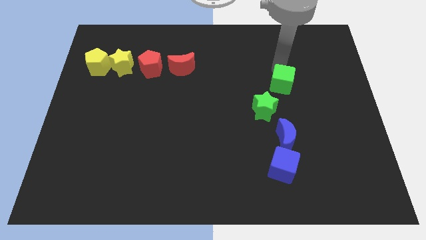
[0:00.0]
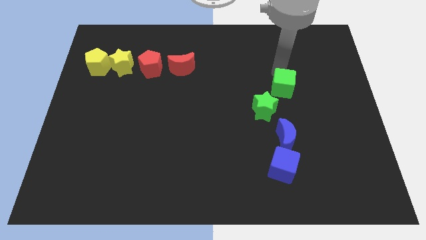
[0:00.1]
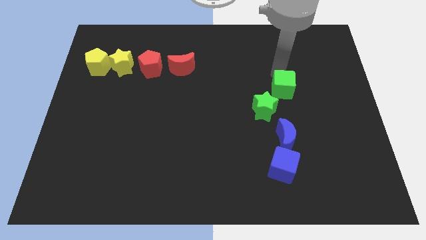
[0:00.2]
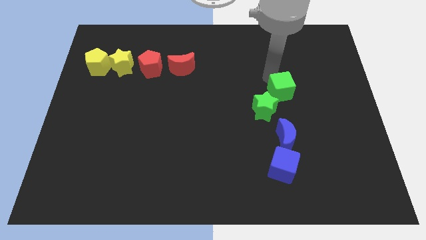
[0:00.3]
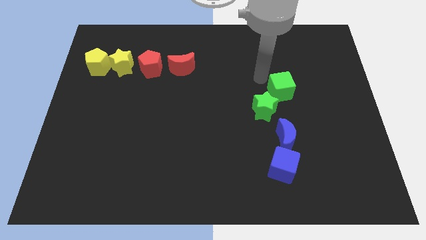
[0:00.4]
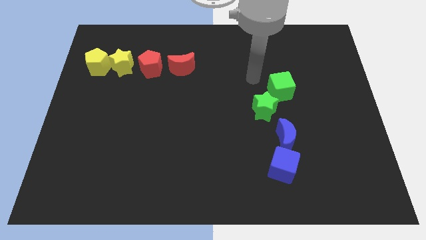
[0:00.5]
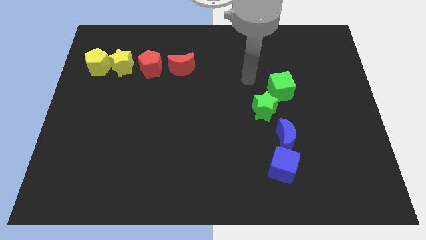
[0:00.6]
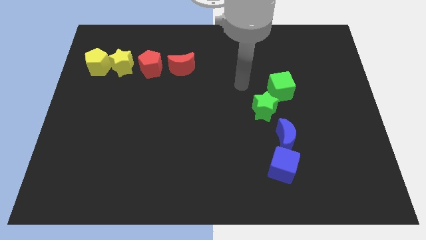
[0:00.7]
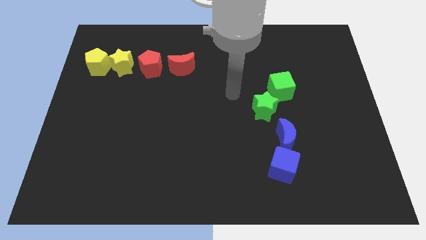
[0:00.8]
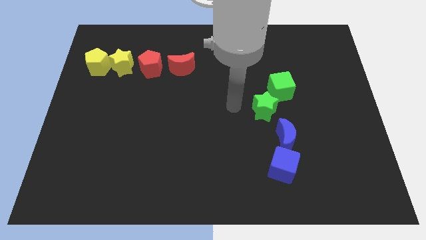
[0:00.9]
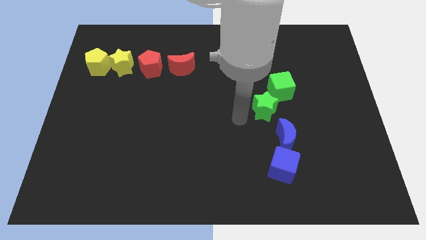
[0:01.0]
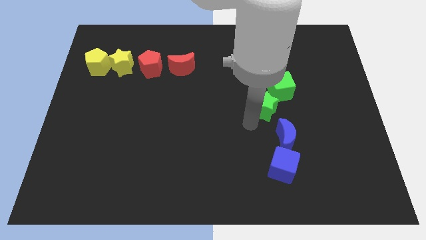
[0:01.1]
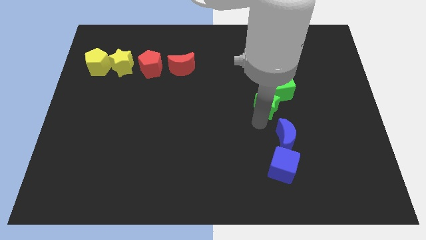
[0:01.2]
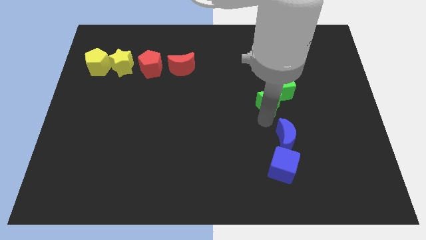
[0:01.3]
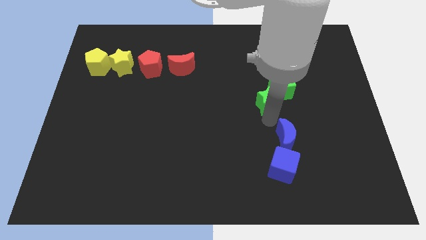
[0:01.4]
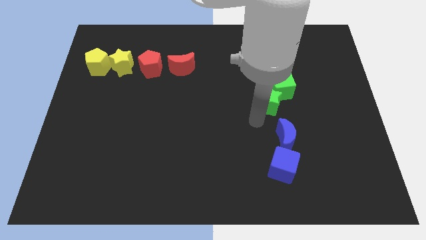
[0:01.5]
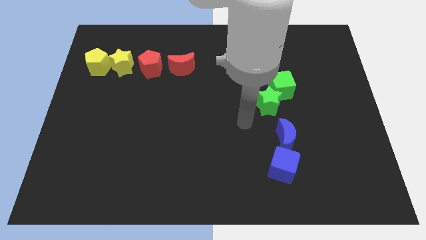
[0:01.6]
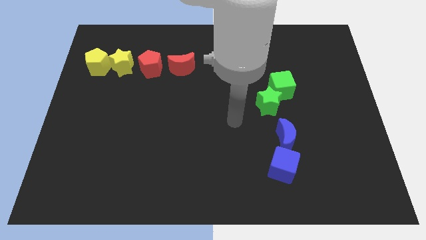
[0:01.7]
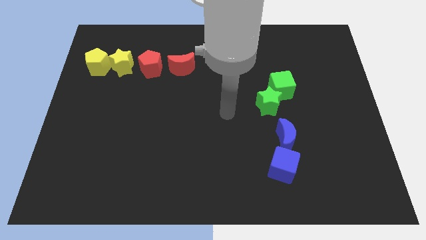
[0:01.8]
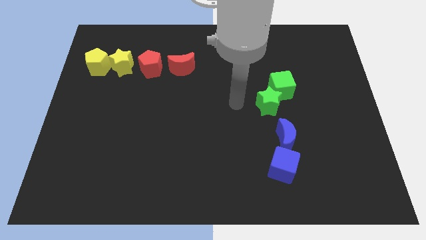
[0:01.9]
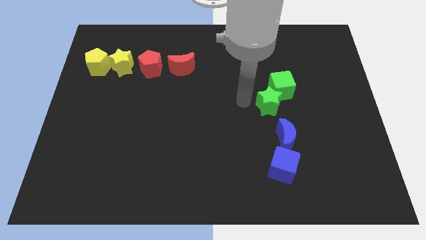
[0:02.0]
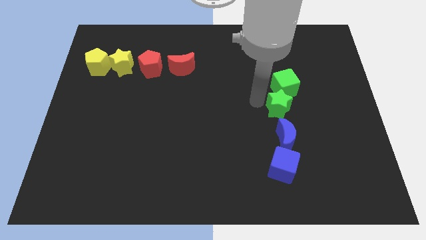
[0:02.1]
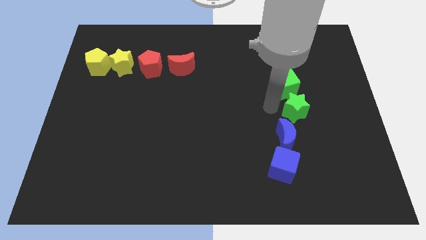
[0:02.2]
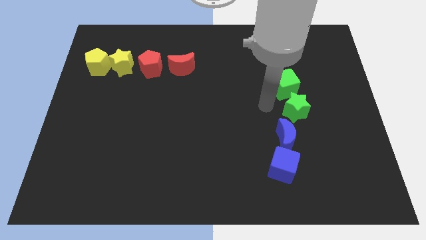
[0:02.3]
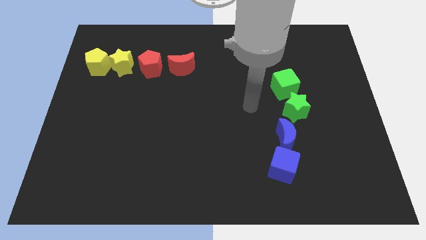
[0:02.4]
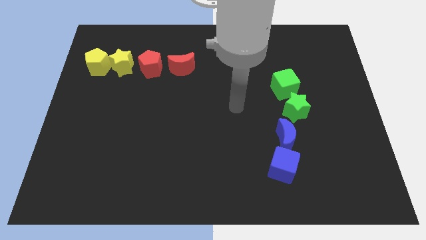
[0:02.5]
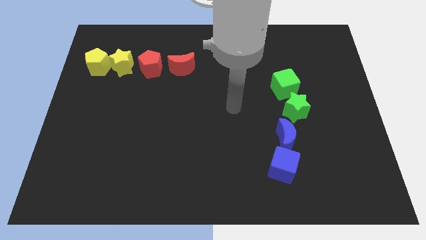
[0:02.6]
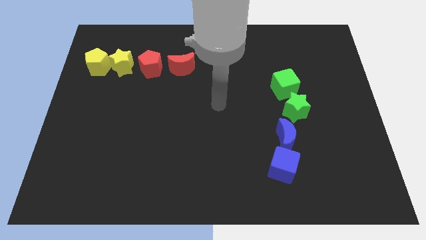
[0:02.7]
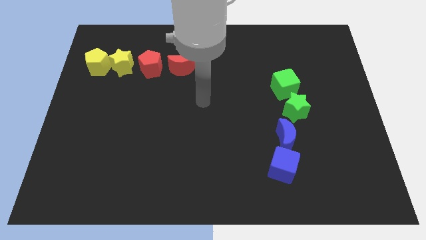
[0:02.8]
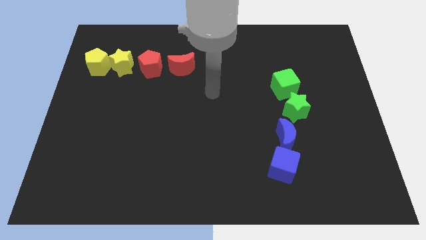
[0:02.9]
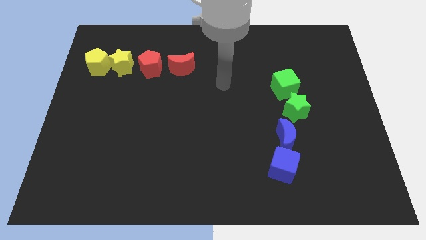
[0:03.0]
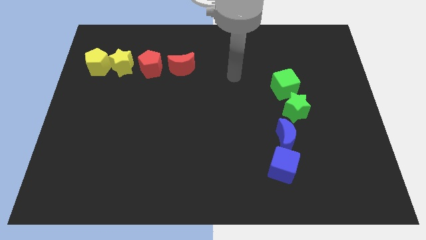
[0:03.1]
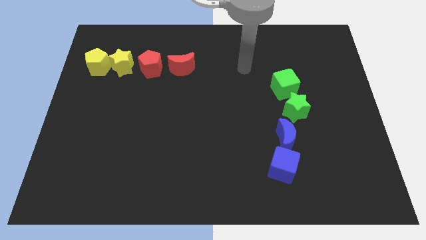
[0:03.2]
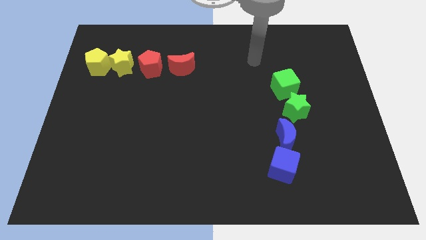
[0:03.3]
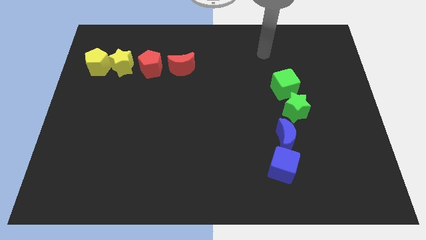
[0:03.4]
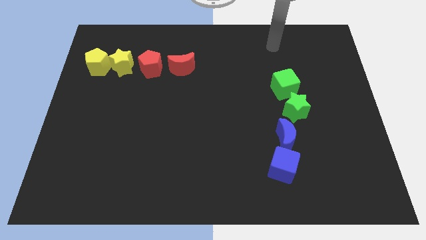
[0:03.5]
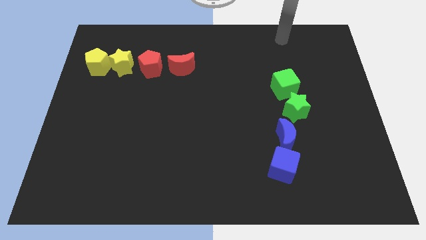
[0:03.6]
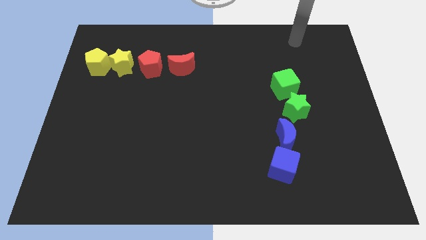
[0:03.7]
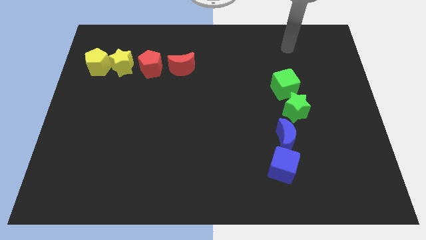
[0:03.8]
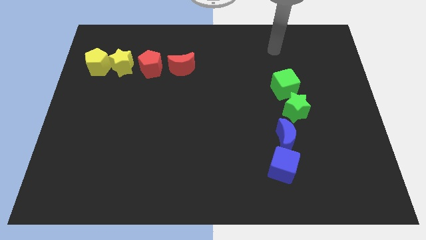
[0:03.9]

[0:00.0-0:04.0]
place the green blocks together at the top side of the blue crescent

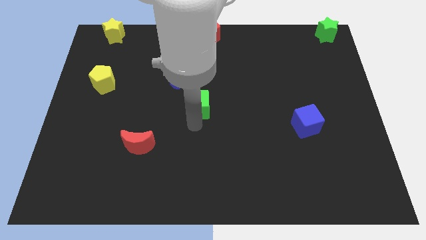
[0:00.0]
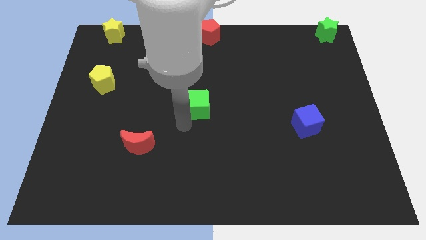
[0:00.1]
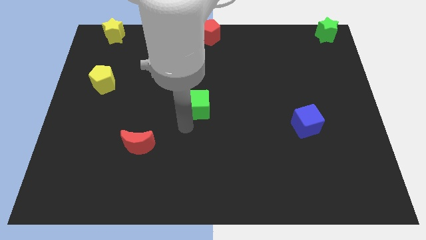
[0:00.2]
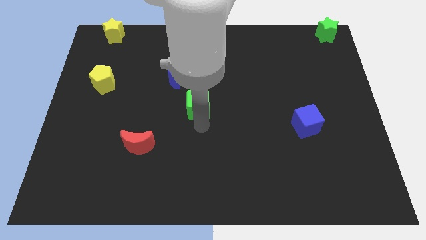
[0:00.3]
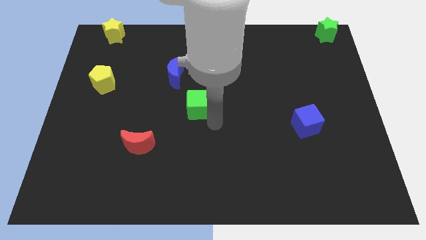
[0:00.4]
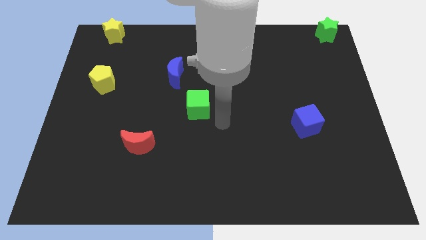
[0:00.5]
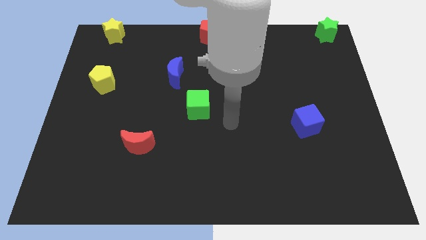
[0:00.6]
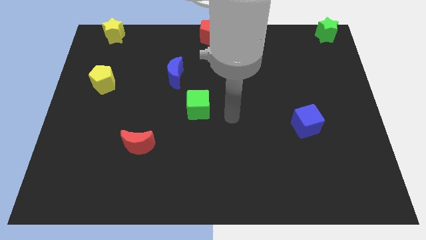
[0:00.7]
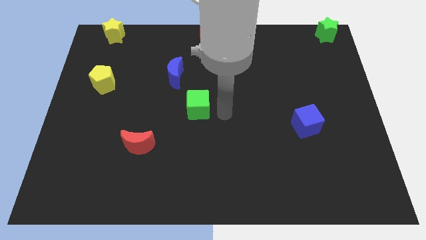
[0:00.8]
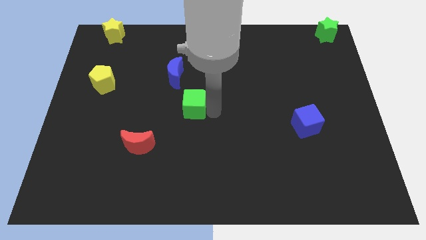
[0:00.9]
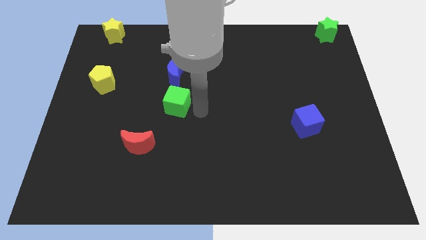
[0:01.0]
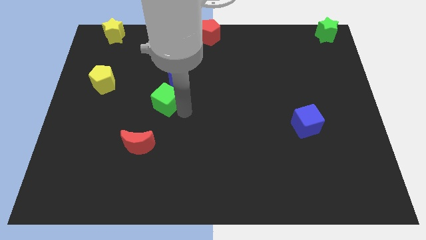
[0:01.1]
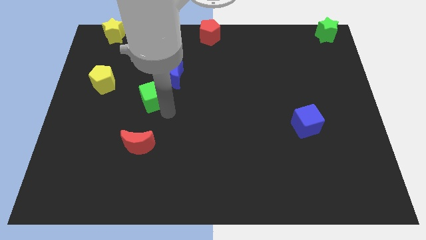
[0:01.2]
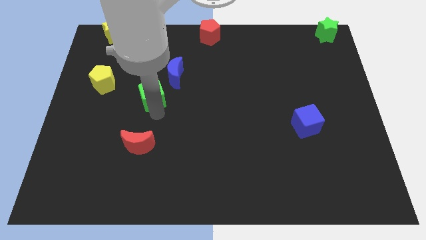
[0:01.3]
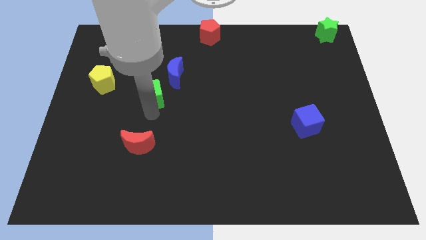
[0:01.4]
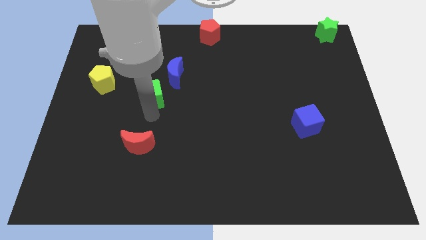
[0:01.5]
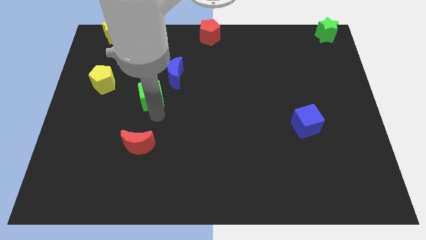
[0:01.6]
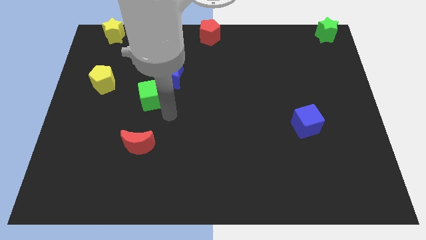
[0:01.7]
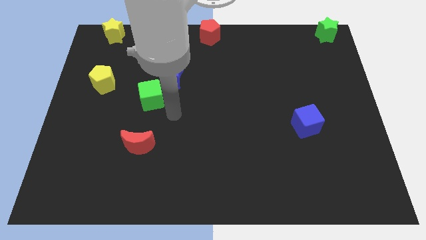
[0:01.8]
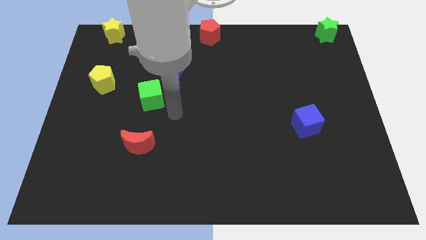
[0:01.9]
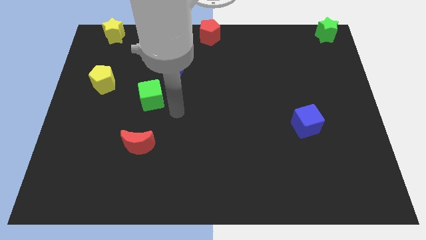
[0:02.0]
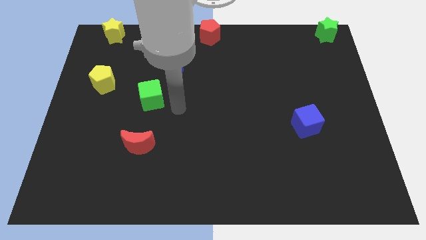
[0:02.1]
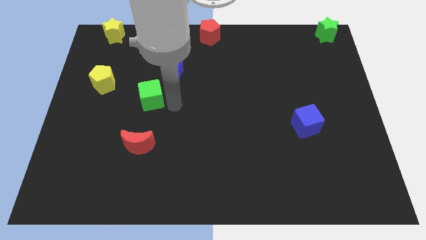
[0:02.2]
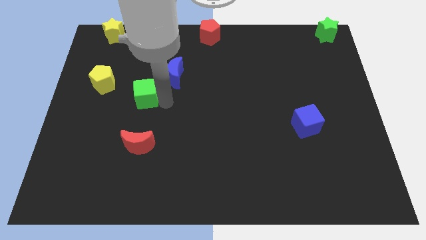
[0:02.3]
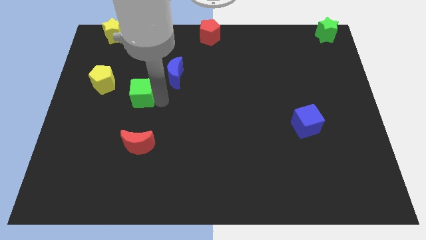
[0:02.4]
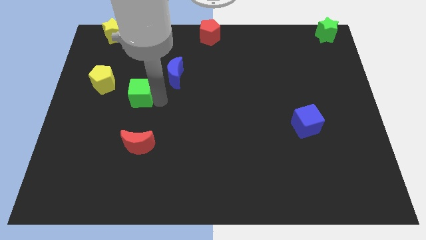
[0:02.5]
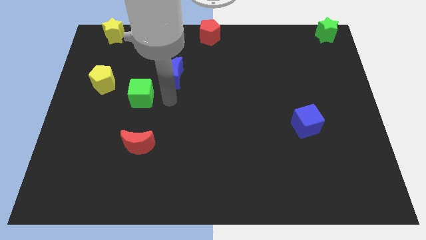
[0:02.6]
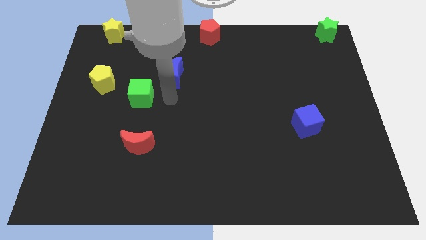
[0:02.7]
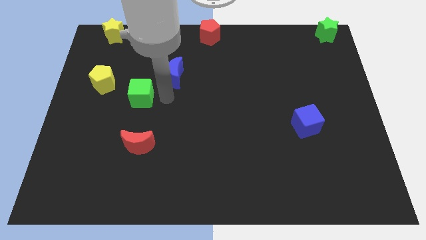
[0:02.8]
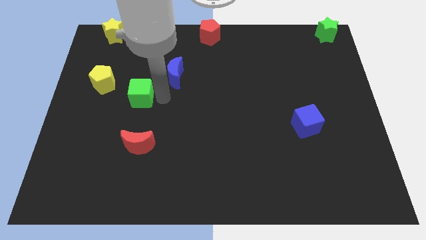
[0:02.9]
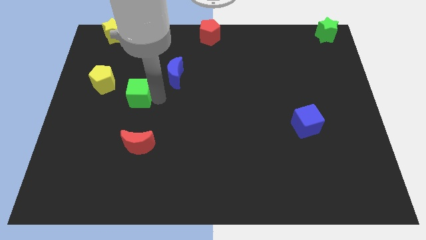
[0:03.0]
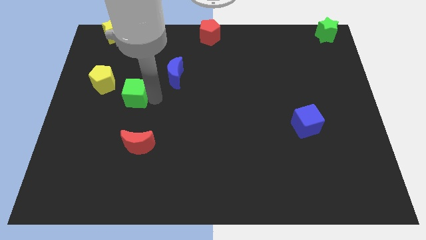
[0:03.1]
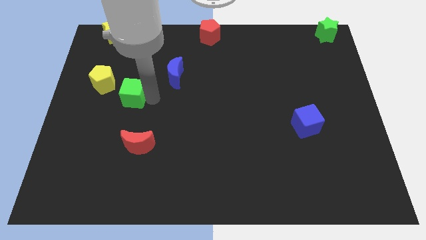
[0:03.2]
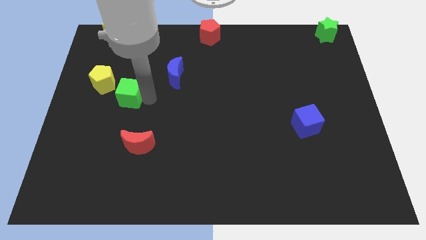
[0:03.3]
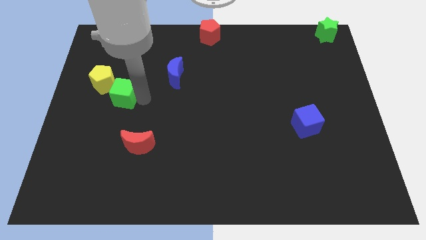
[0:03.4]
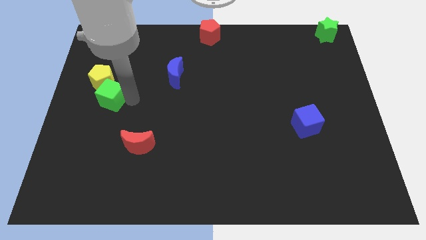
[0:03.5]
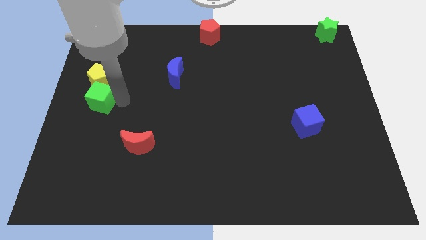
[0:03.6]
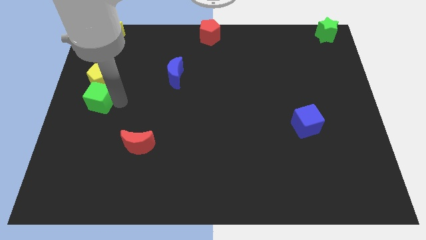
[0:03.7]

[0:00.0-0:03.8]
place the green cube below the yellow pentagon

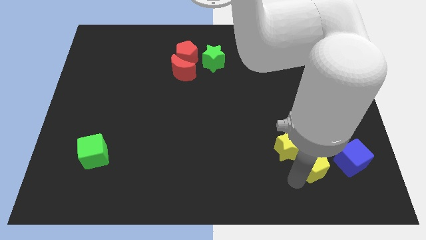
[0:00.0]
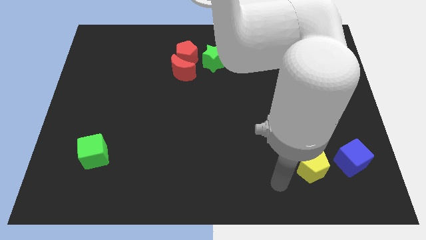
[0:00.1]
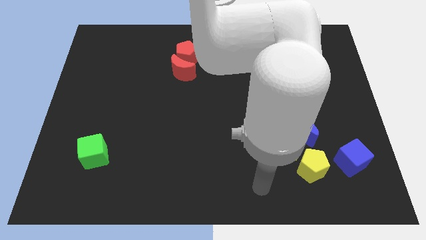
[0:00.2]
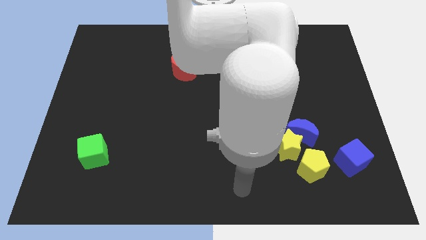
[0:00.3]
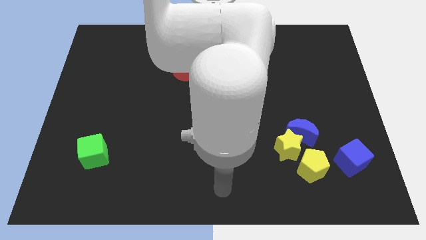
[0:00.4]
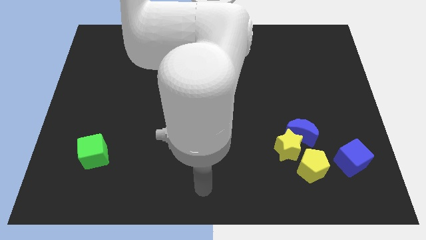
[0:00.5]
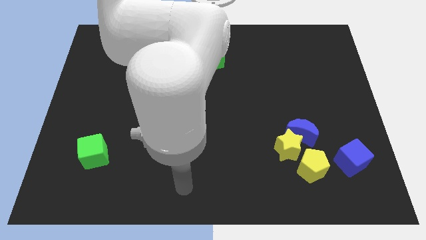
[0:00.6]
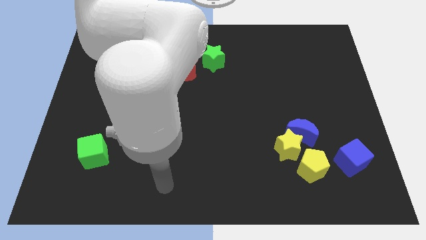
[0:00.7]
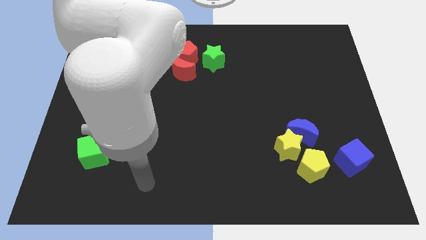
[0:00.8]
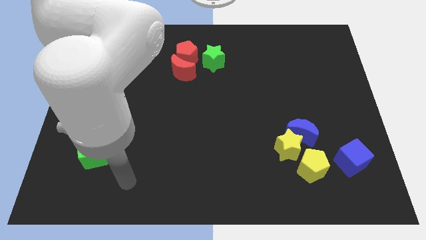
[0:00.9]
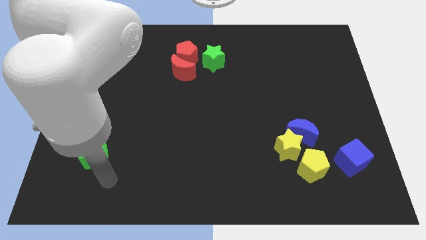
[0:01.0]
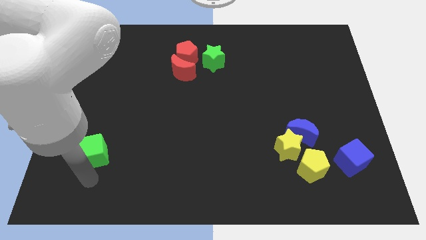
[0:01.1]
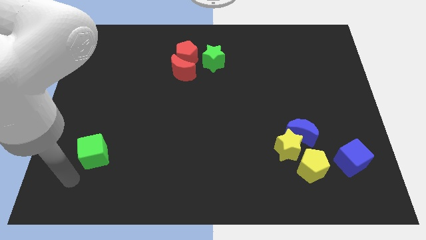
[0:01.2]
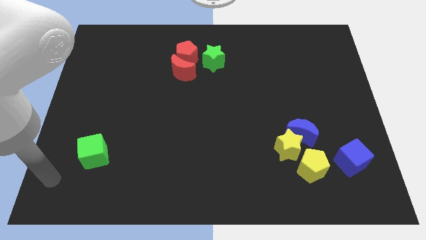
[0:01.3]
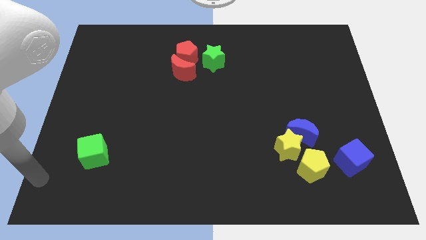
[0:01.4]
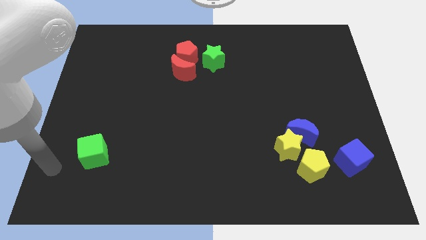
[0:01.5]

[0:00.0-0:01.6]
move your arm away from the yellow pentagon
